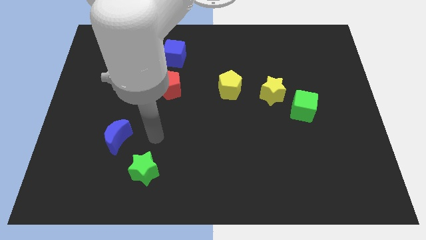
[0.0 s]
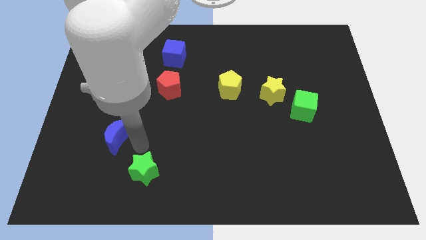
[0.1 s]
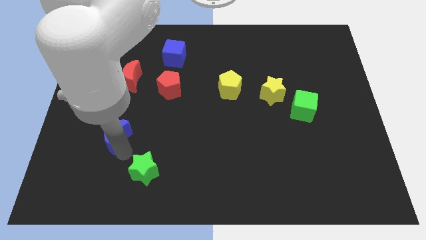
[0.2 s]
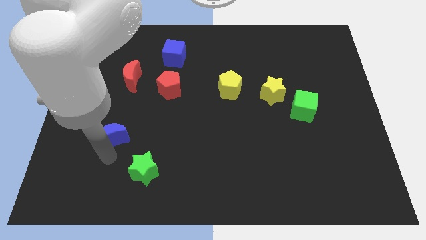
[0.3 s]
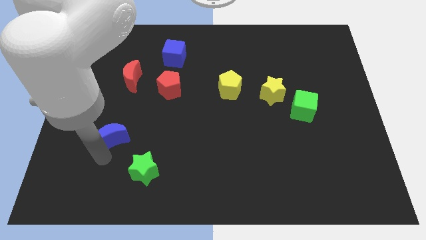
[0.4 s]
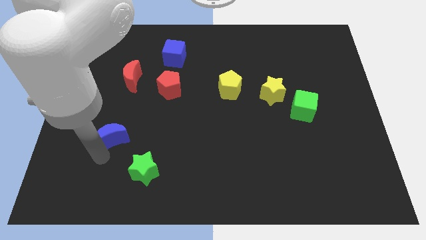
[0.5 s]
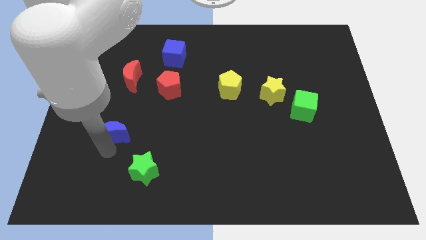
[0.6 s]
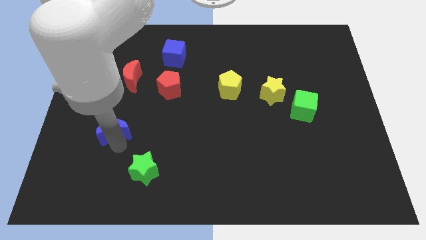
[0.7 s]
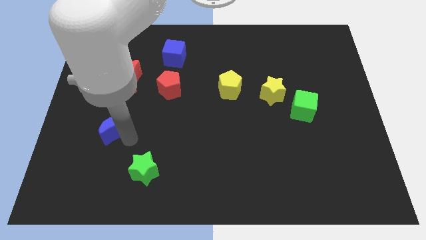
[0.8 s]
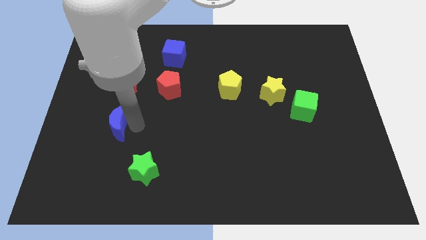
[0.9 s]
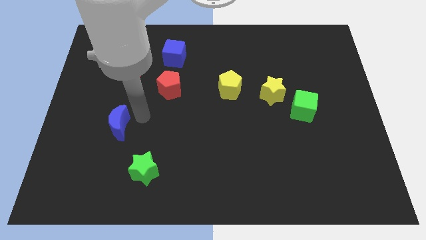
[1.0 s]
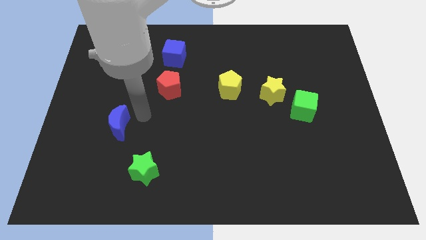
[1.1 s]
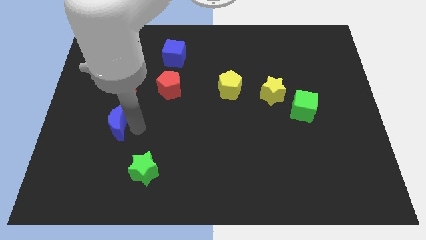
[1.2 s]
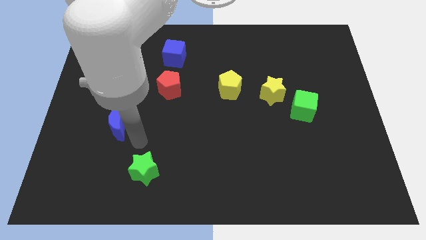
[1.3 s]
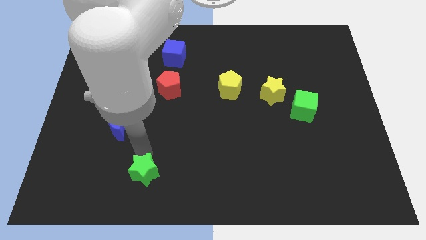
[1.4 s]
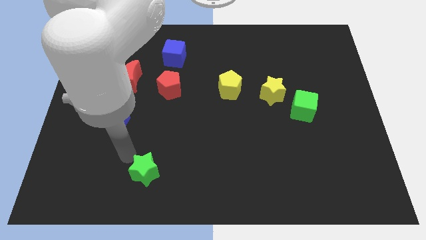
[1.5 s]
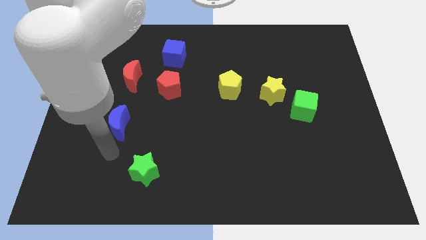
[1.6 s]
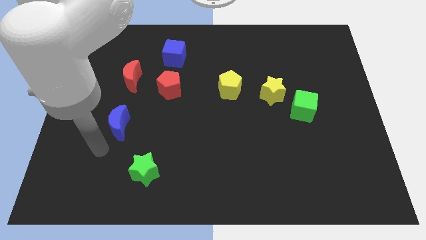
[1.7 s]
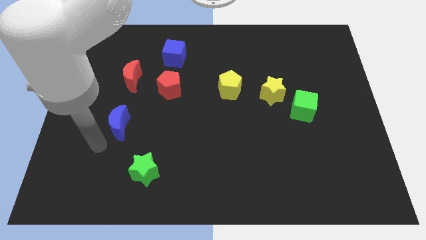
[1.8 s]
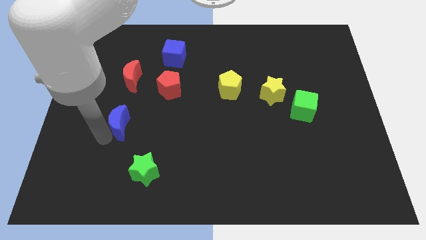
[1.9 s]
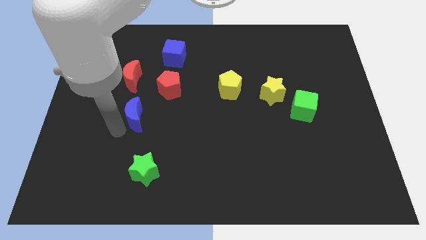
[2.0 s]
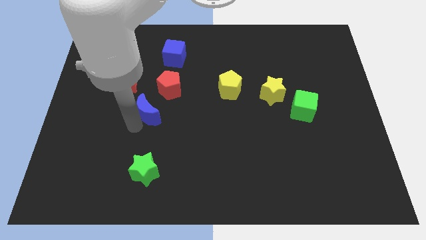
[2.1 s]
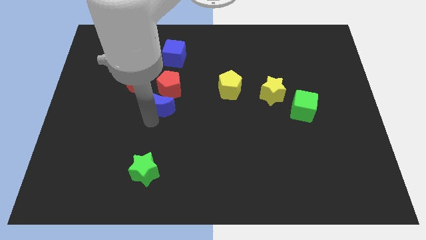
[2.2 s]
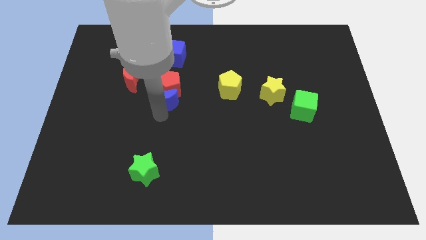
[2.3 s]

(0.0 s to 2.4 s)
place the blue moon under the red pentagon

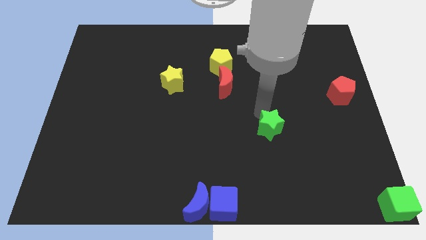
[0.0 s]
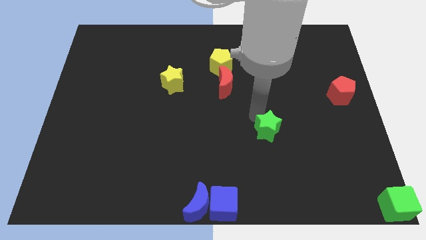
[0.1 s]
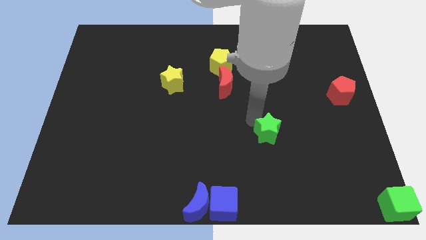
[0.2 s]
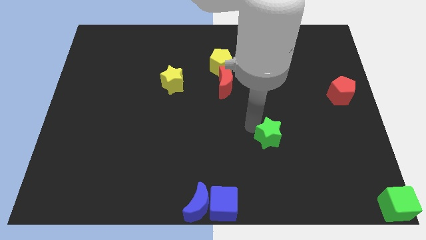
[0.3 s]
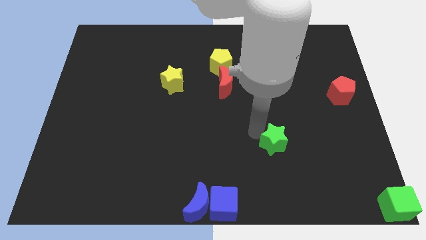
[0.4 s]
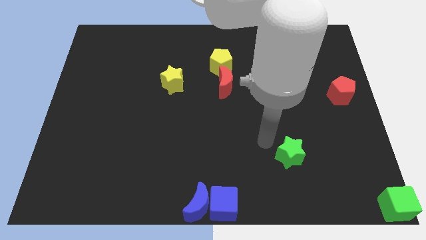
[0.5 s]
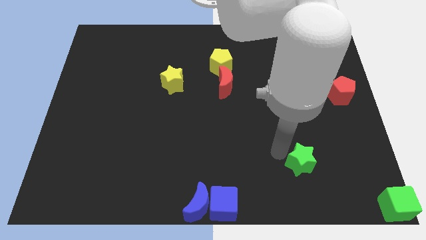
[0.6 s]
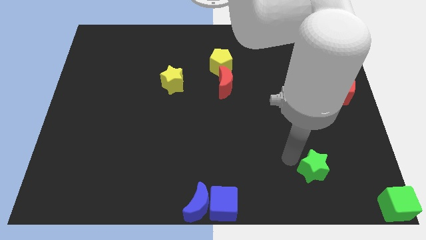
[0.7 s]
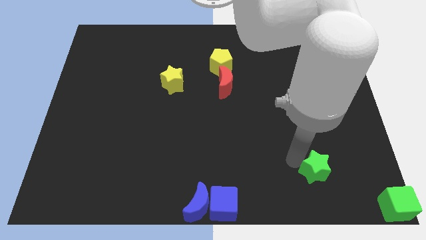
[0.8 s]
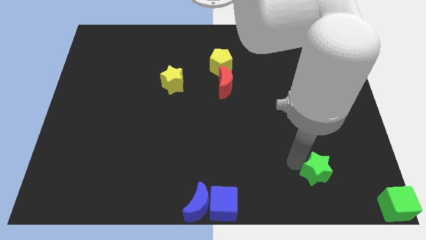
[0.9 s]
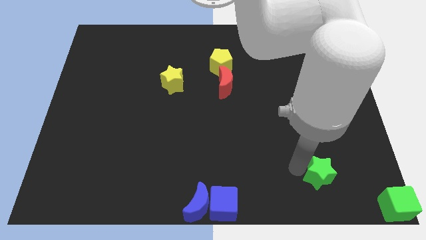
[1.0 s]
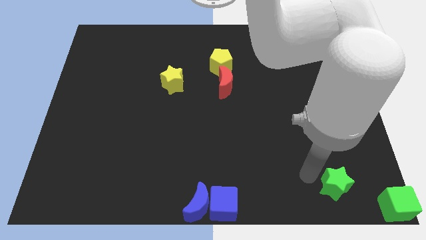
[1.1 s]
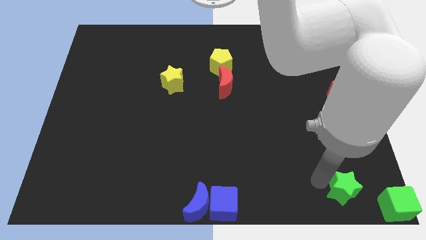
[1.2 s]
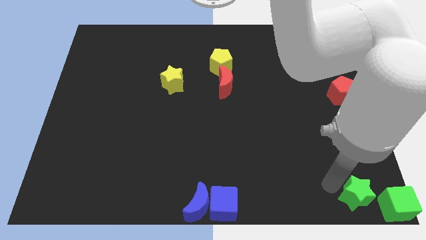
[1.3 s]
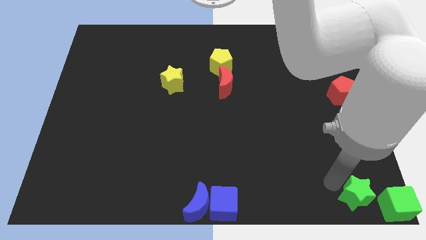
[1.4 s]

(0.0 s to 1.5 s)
move the green star towards the green cube

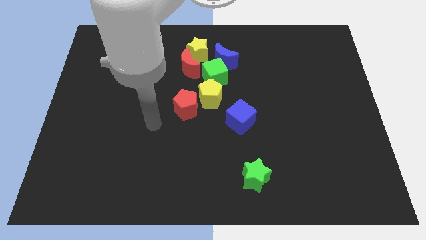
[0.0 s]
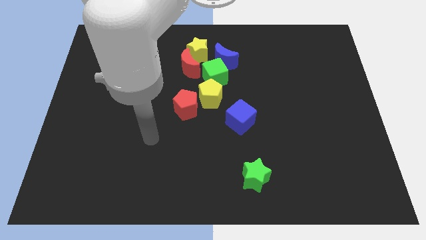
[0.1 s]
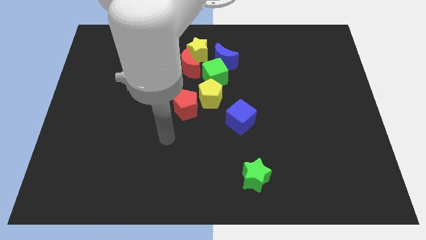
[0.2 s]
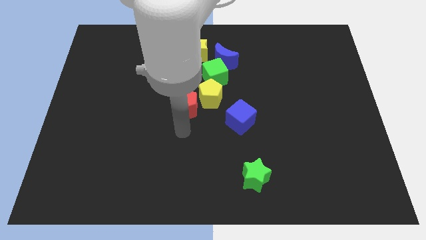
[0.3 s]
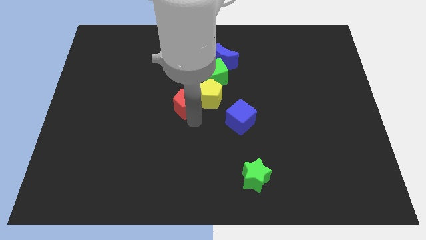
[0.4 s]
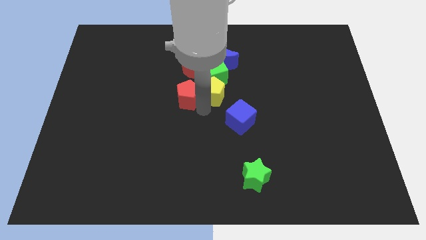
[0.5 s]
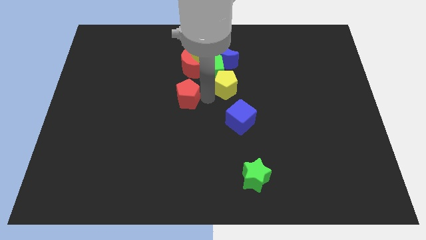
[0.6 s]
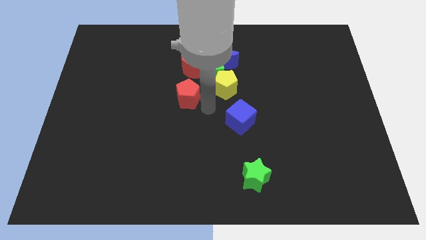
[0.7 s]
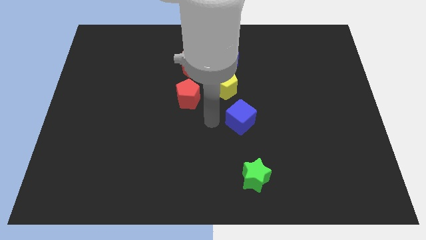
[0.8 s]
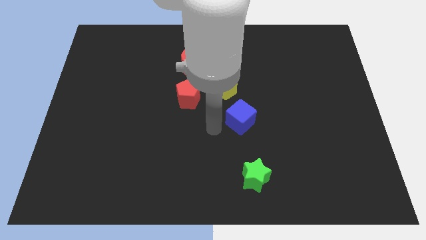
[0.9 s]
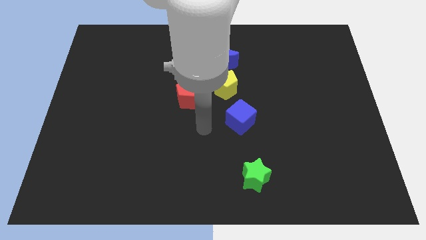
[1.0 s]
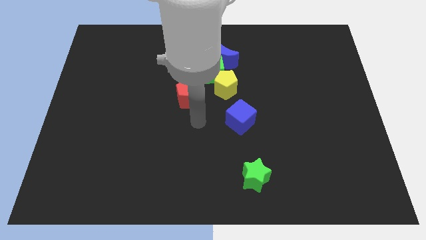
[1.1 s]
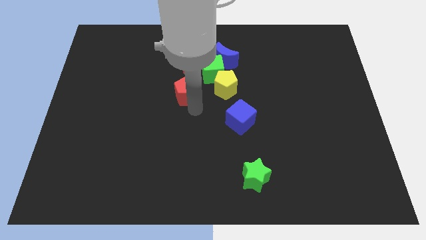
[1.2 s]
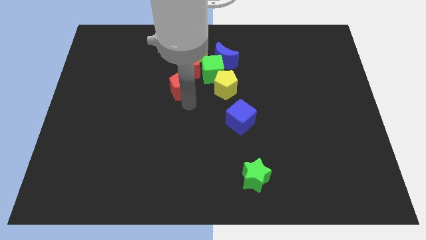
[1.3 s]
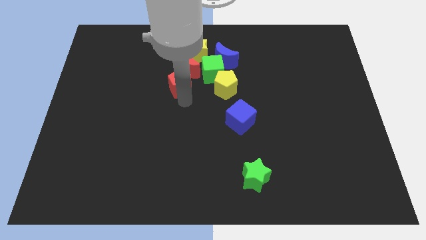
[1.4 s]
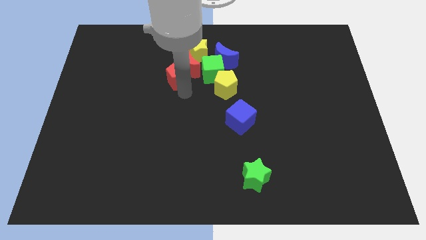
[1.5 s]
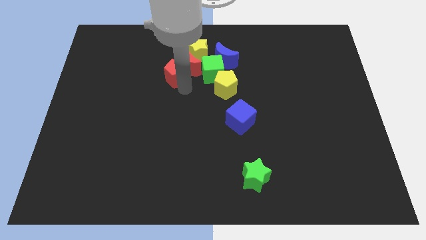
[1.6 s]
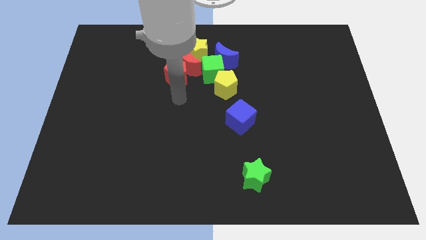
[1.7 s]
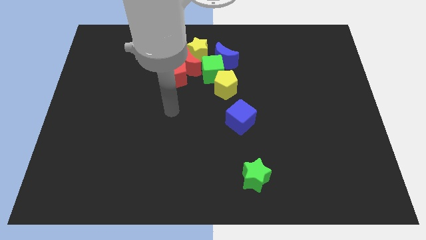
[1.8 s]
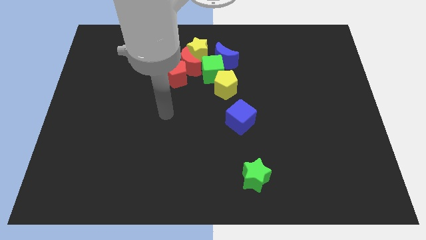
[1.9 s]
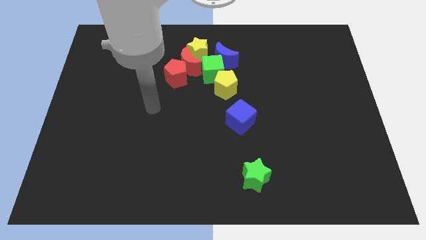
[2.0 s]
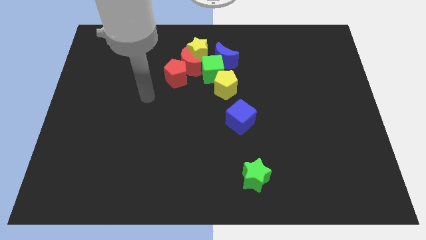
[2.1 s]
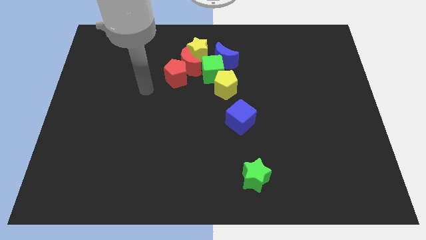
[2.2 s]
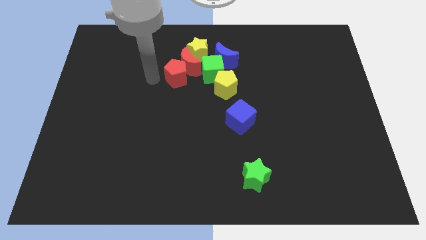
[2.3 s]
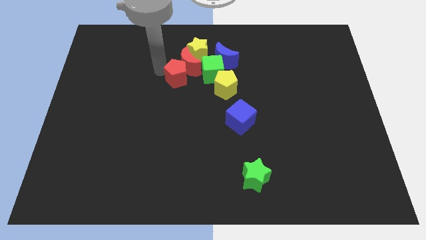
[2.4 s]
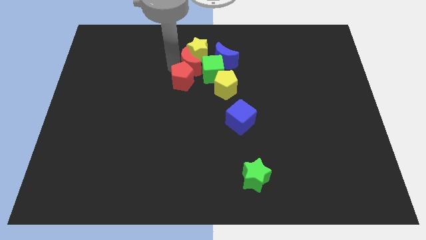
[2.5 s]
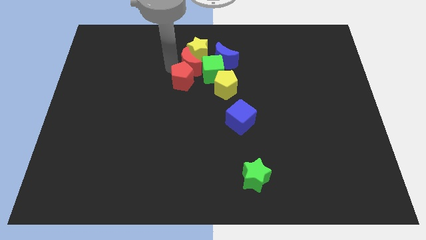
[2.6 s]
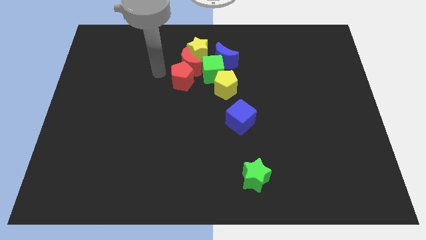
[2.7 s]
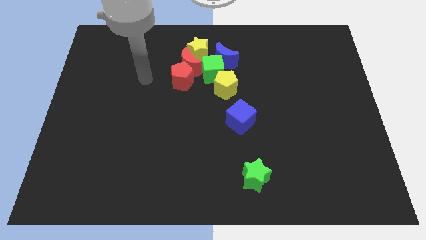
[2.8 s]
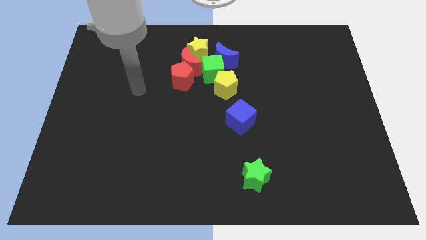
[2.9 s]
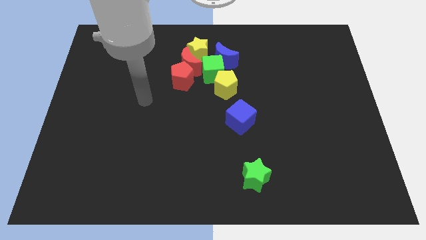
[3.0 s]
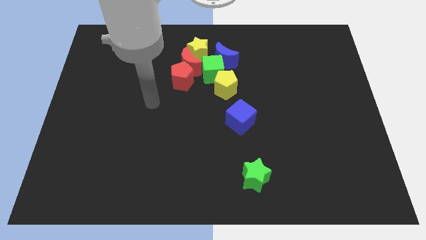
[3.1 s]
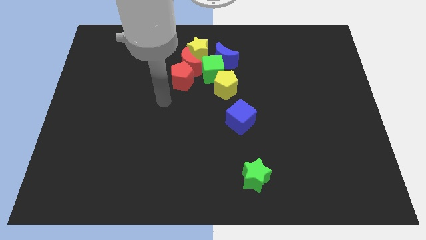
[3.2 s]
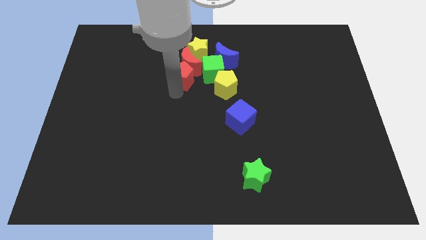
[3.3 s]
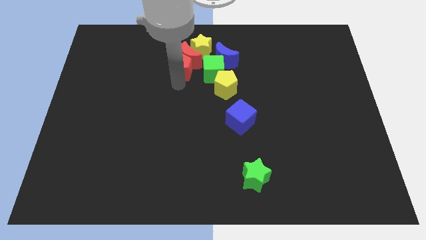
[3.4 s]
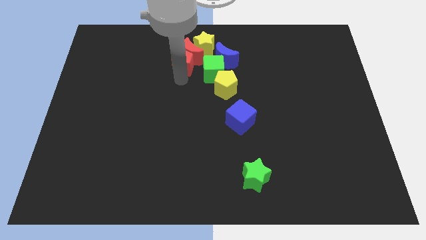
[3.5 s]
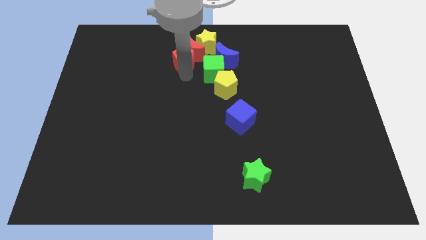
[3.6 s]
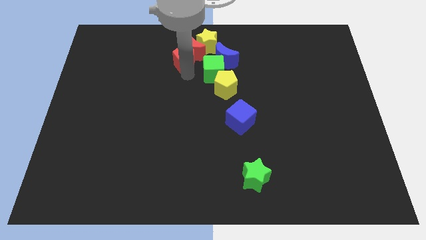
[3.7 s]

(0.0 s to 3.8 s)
push the red pentagon away from the yellow pentagon

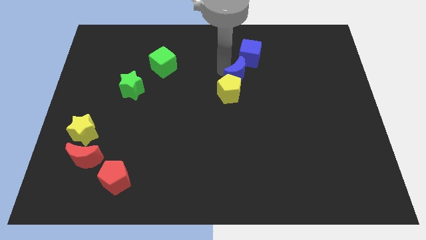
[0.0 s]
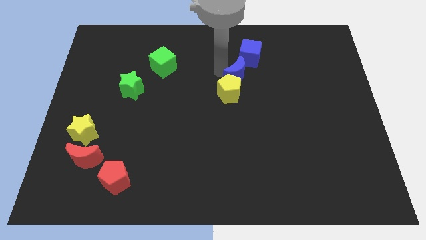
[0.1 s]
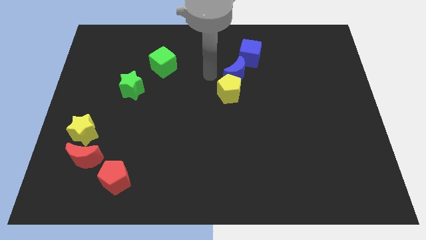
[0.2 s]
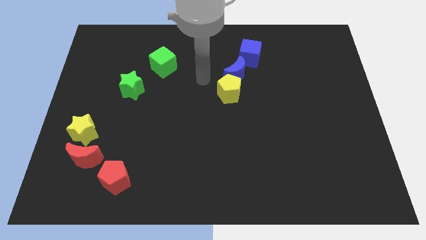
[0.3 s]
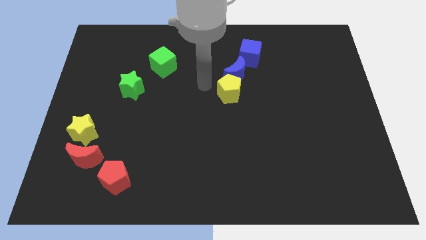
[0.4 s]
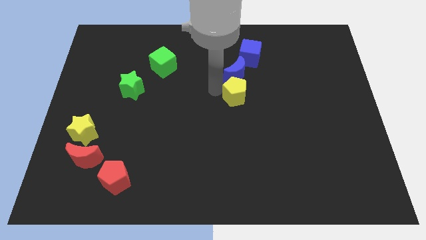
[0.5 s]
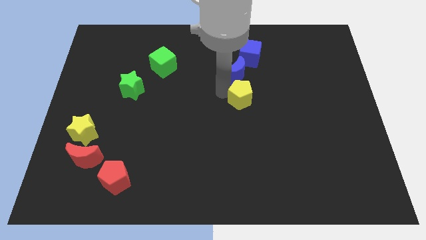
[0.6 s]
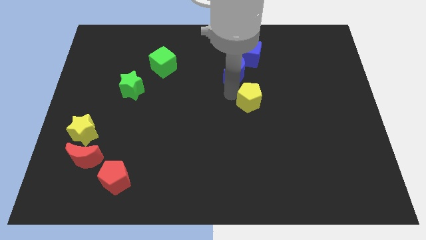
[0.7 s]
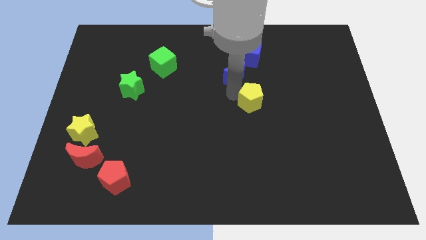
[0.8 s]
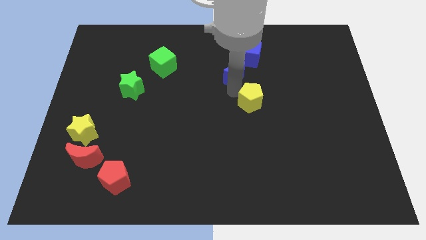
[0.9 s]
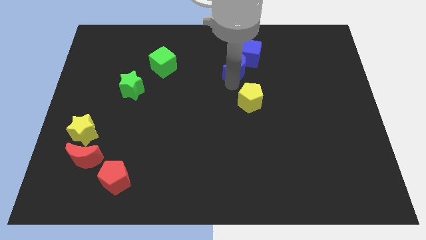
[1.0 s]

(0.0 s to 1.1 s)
place yellow pentagon to the bottom of blue cube
